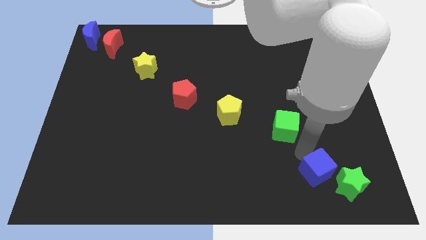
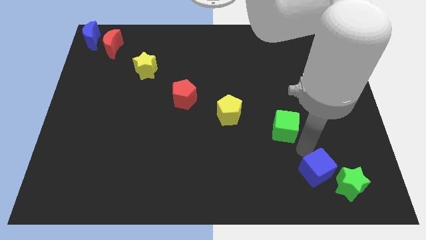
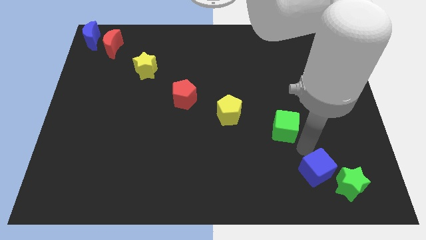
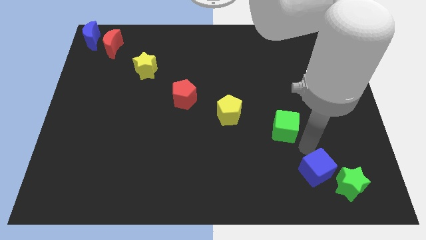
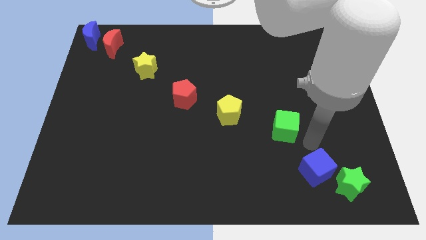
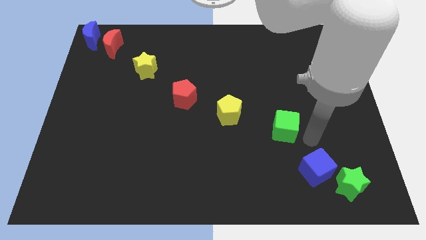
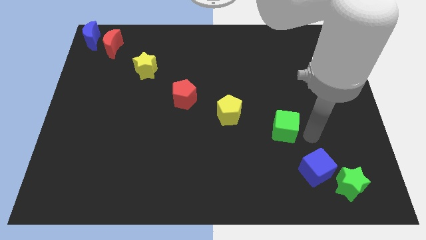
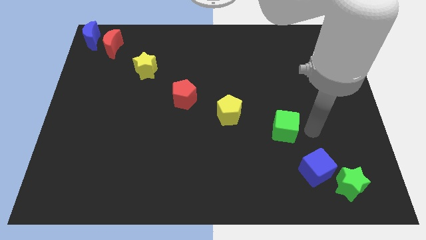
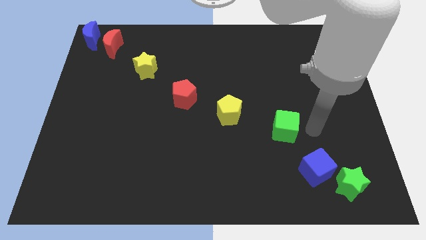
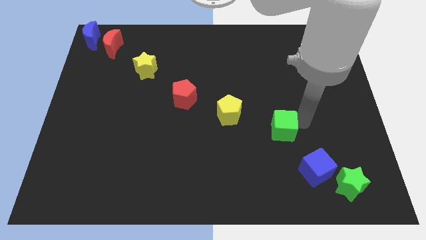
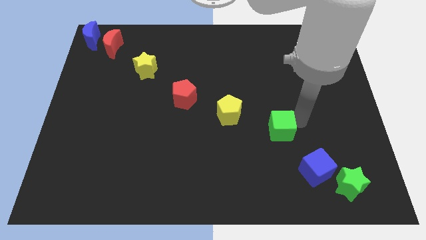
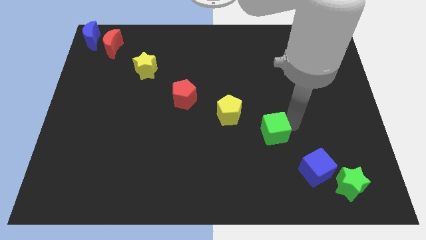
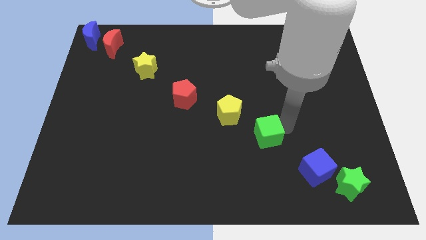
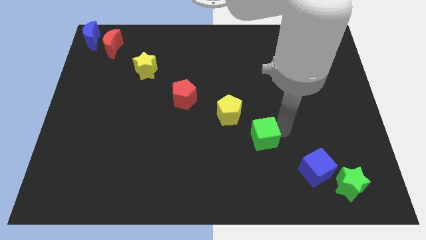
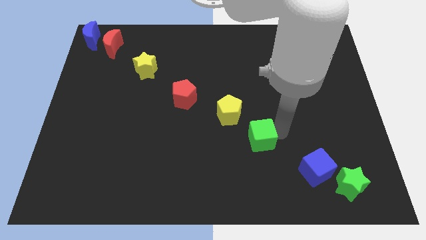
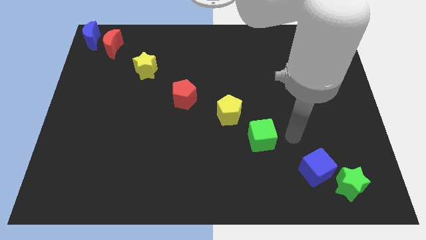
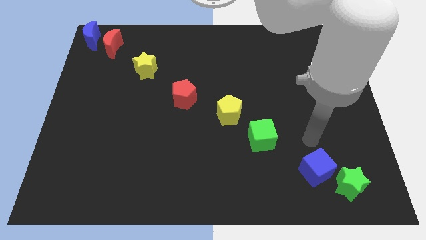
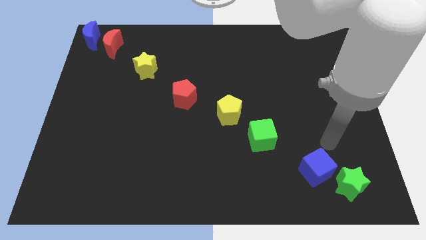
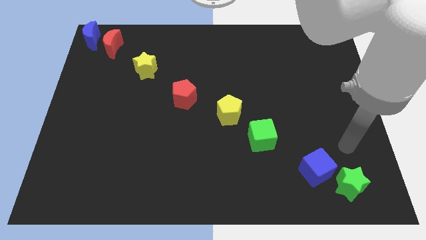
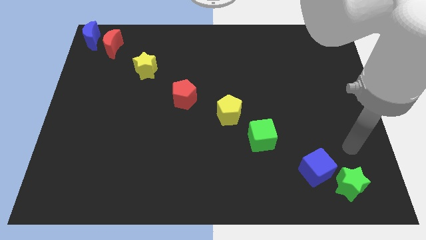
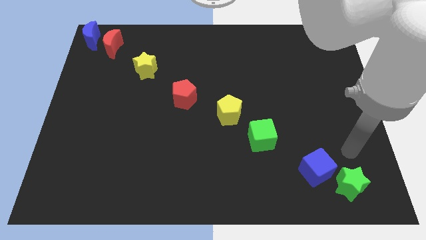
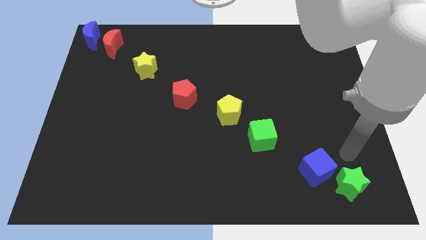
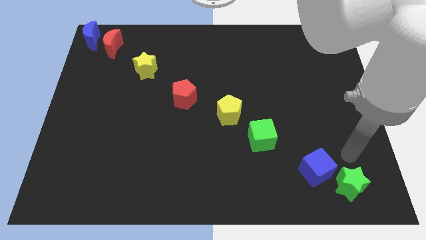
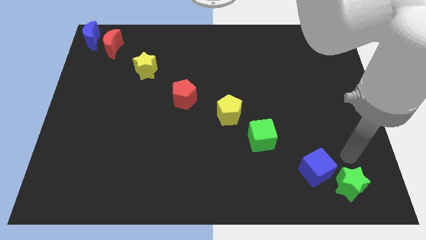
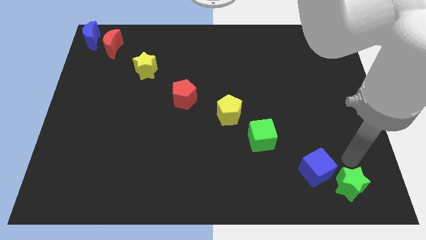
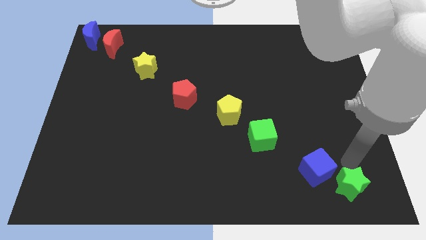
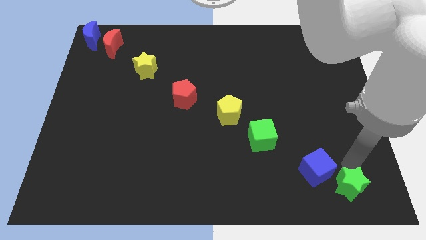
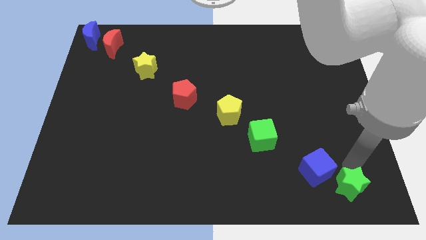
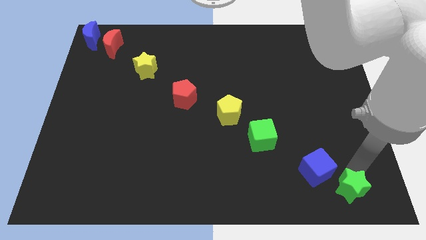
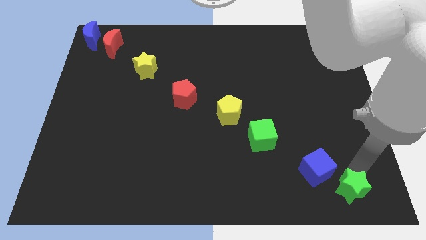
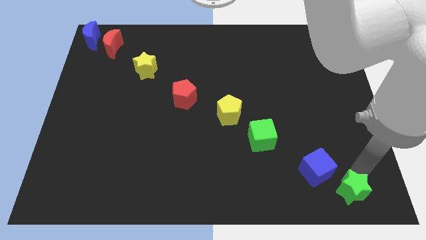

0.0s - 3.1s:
place green cube along the line

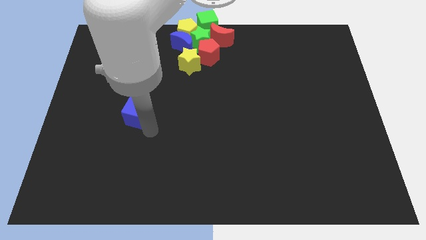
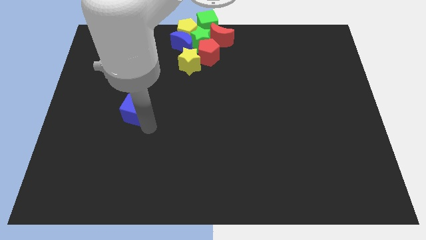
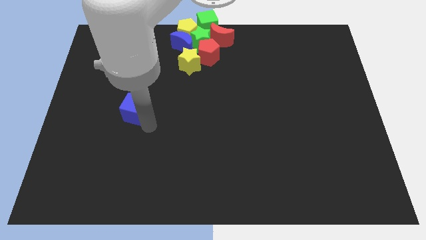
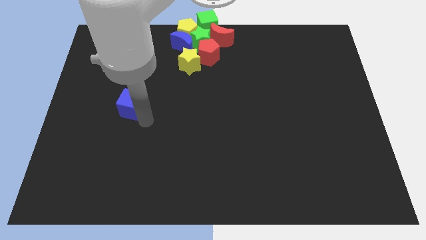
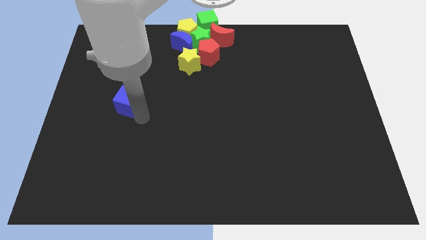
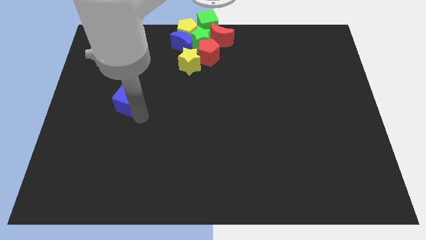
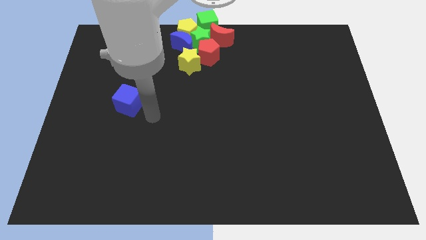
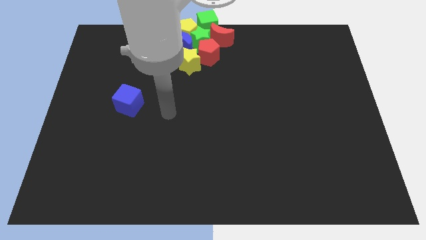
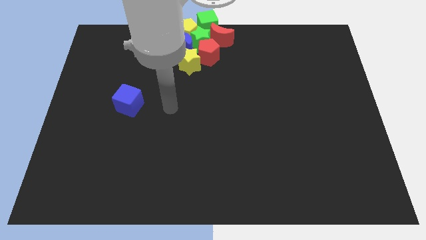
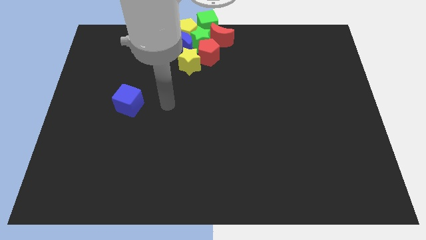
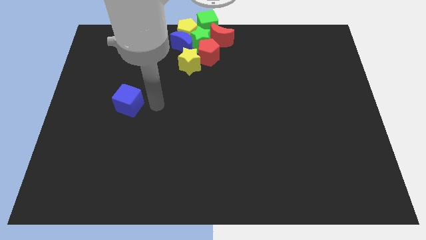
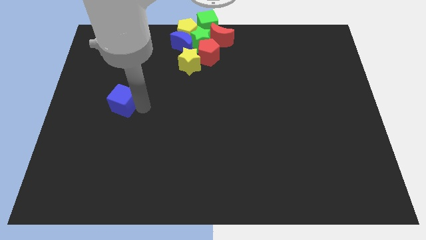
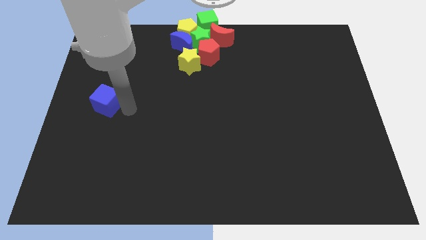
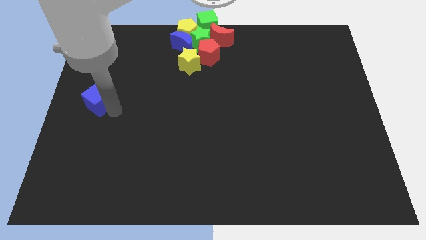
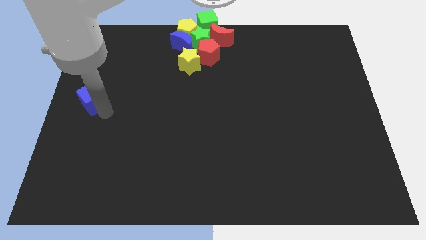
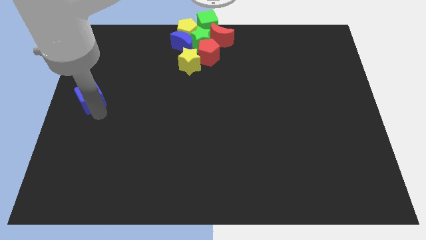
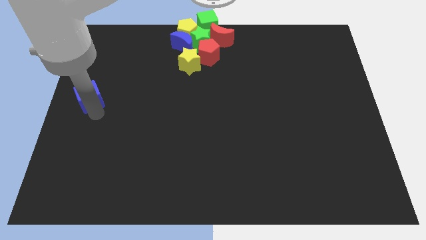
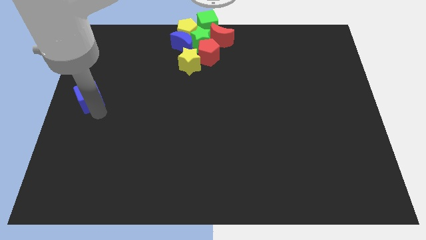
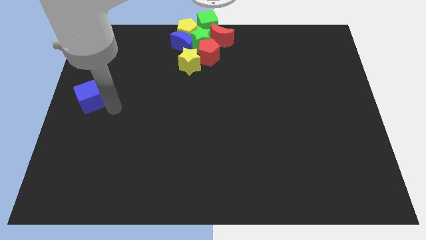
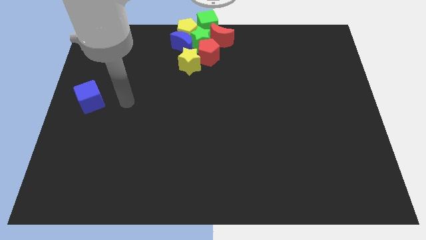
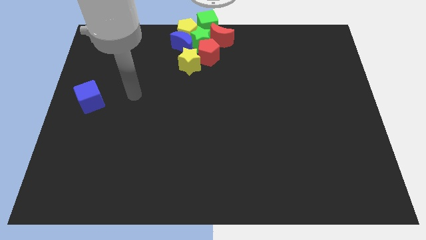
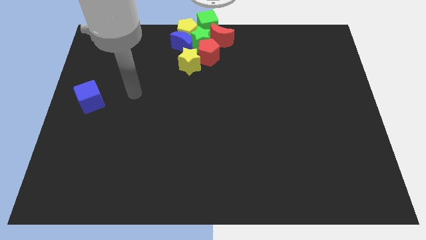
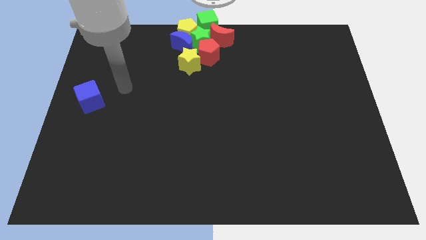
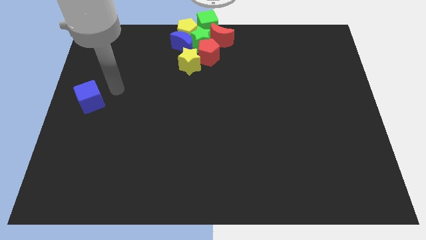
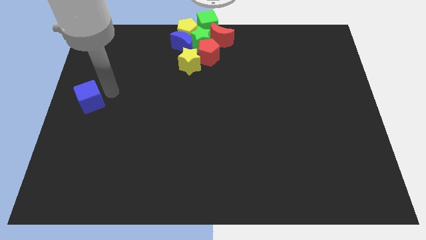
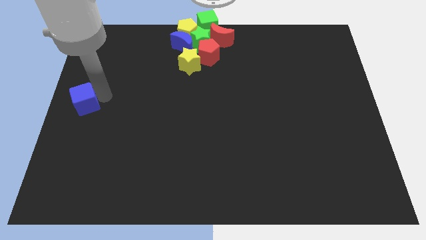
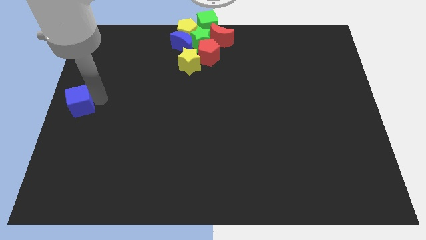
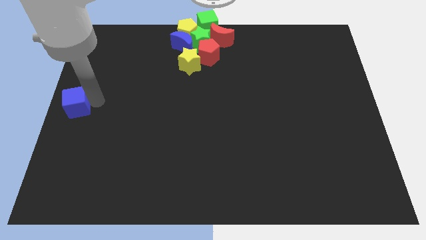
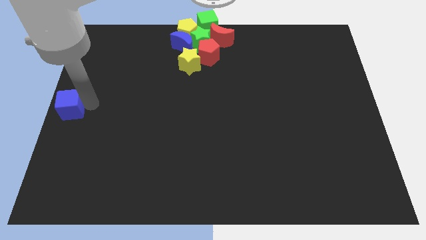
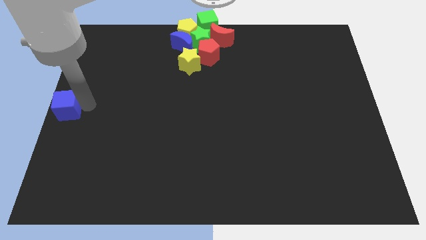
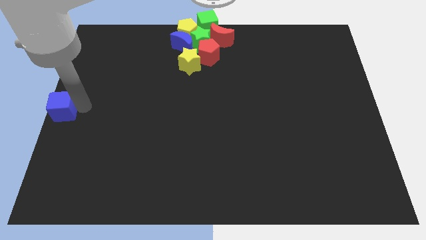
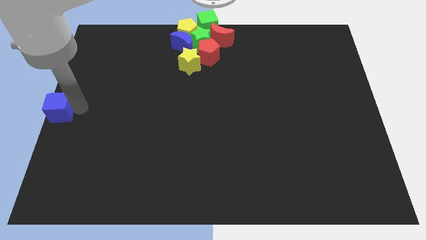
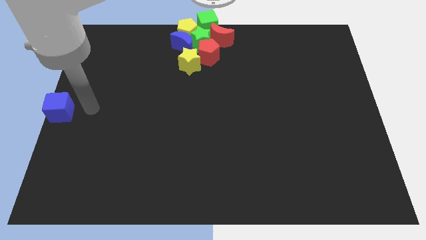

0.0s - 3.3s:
place the blue cube to the left center of the board

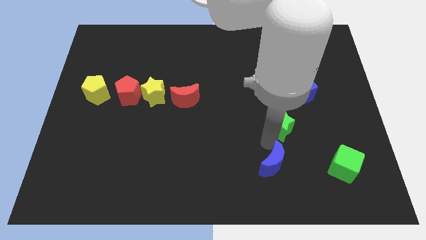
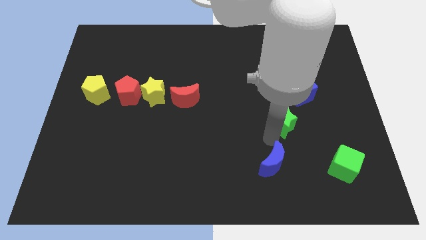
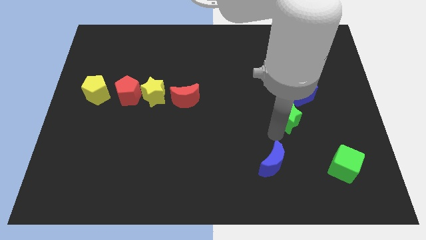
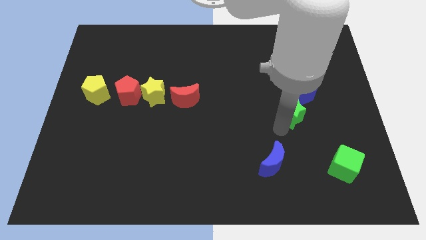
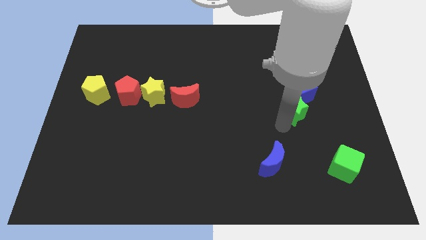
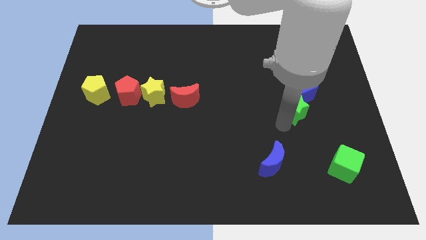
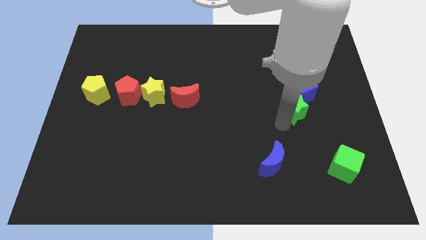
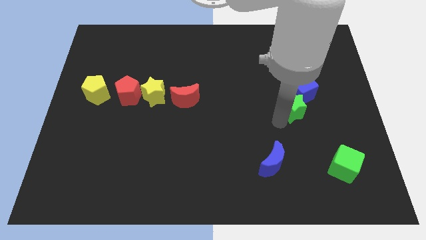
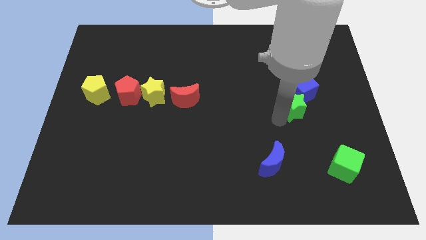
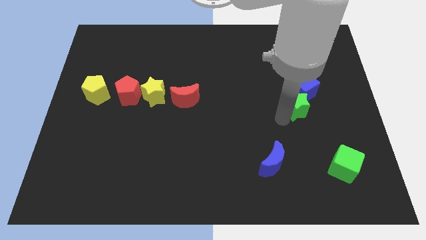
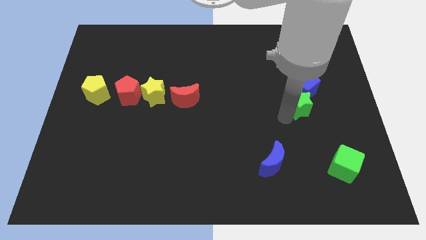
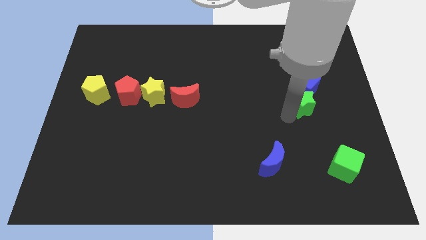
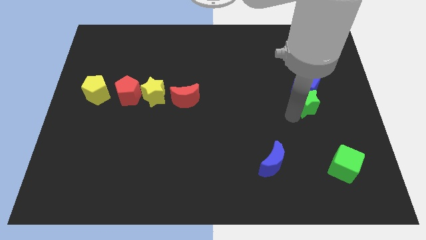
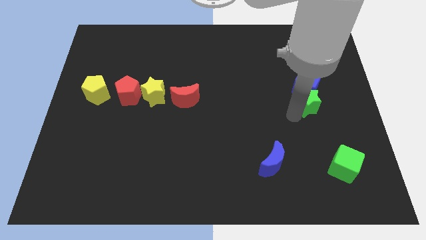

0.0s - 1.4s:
push the green star into the blue cube

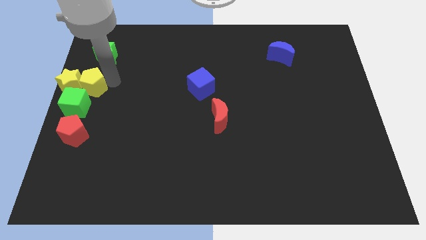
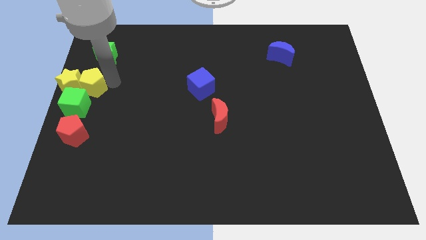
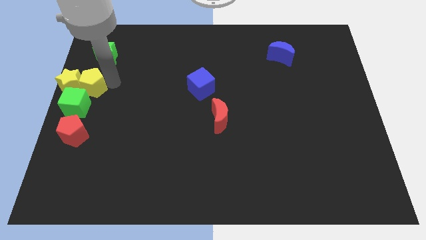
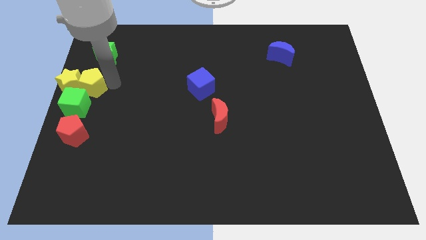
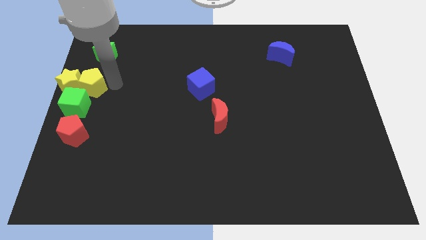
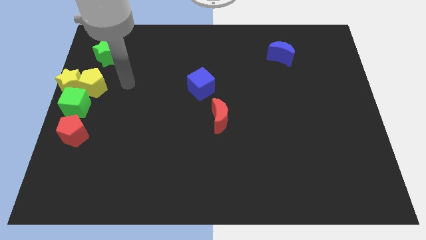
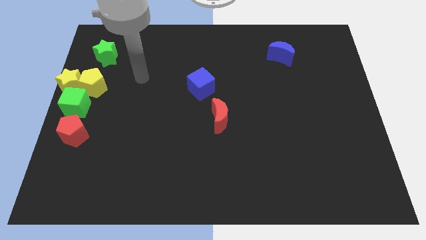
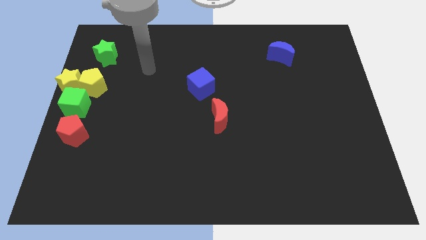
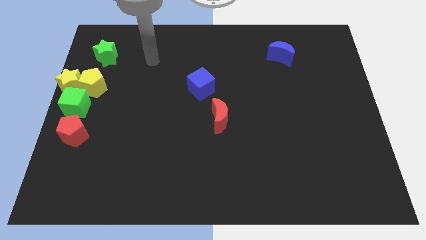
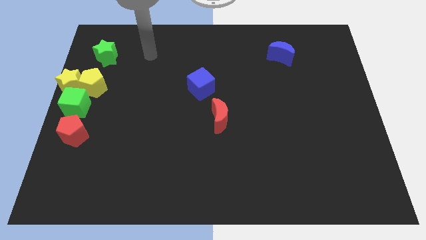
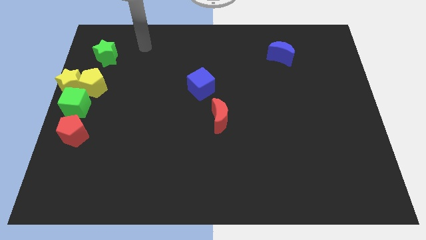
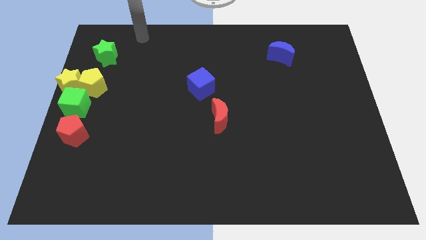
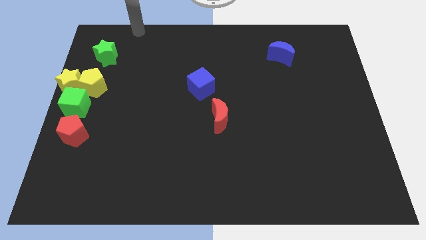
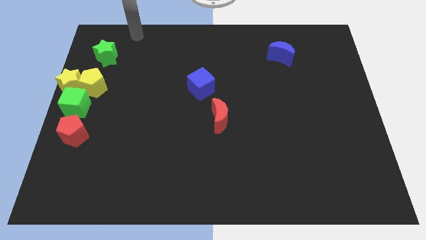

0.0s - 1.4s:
move your arm away from the yellow pentagon
